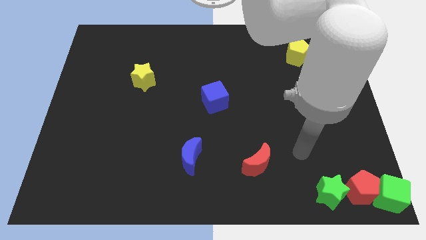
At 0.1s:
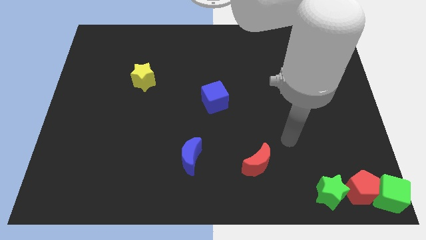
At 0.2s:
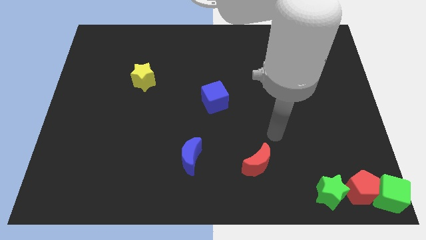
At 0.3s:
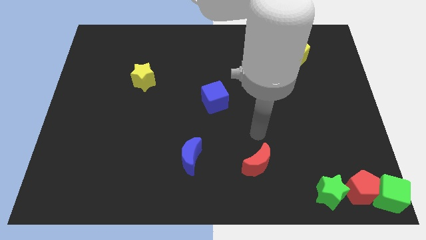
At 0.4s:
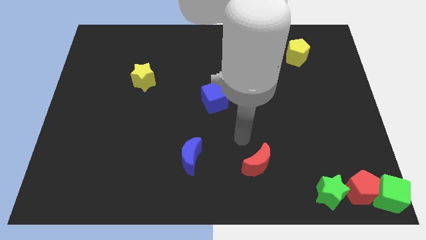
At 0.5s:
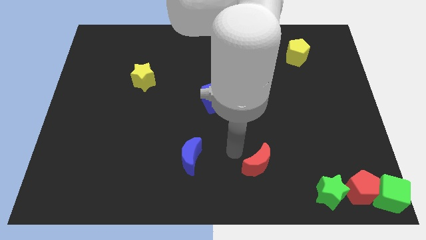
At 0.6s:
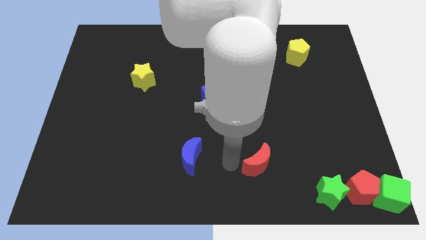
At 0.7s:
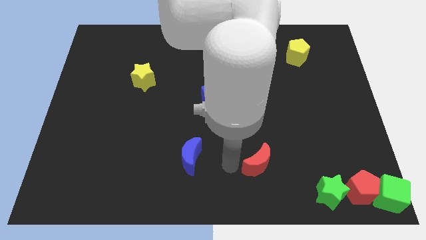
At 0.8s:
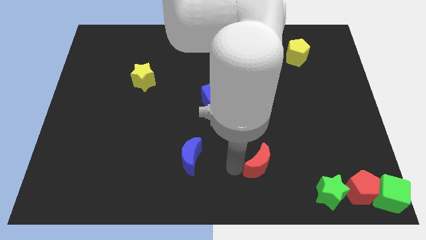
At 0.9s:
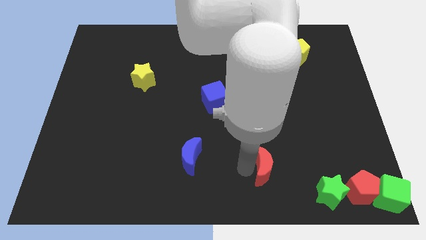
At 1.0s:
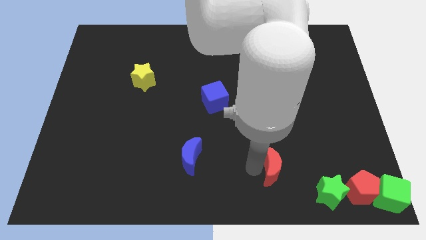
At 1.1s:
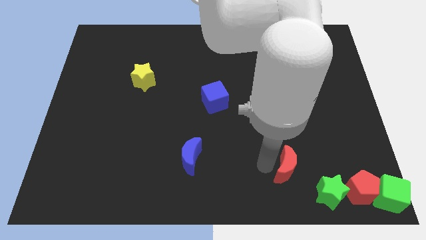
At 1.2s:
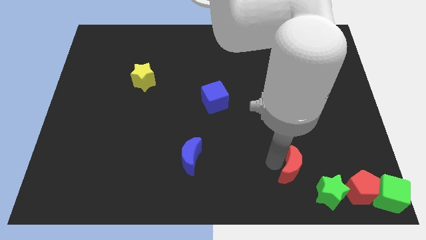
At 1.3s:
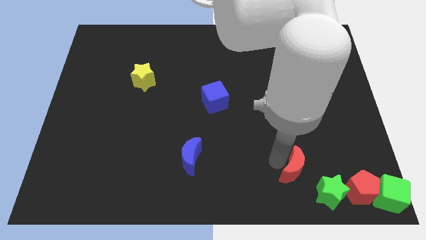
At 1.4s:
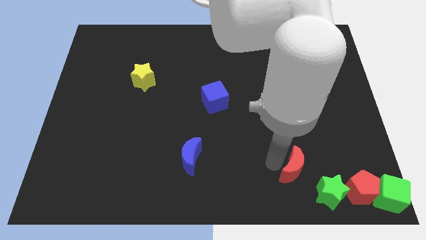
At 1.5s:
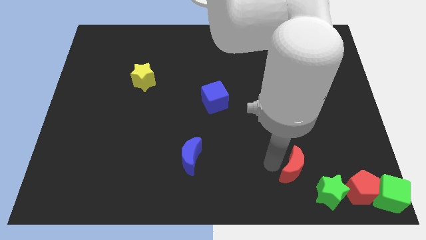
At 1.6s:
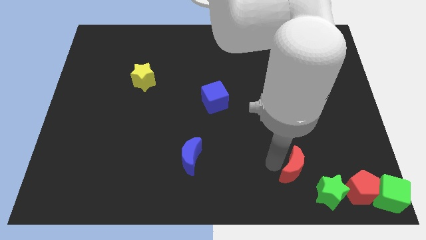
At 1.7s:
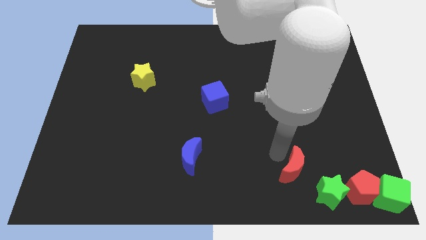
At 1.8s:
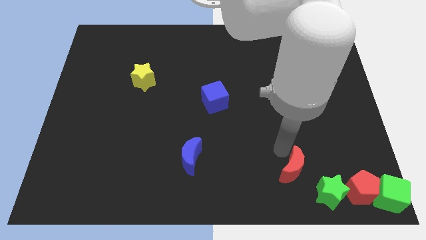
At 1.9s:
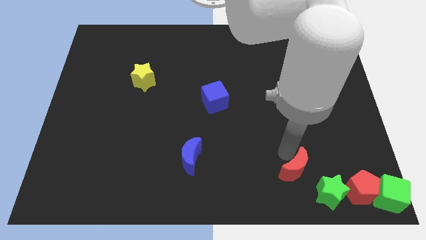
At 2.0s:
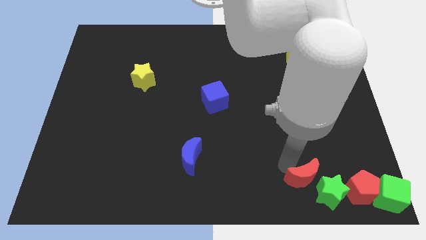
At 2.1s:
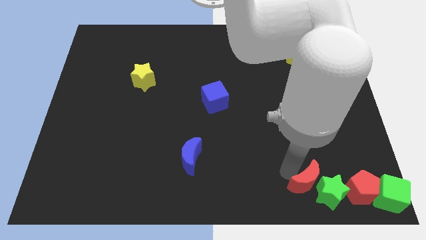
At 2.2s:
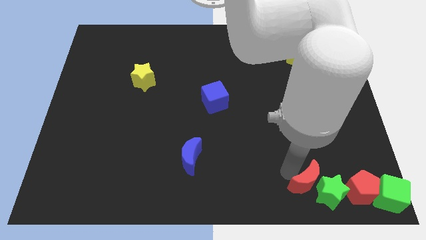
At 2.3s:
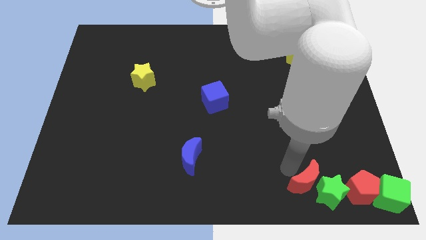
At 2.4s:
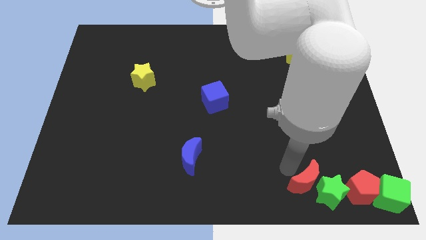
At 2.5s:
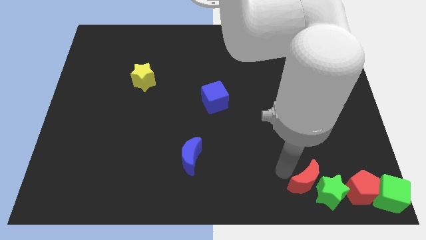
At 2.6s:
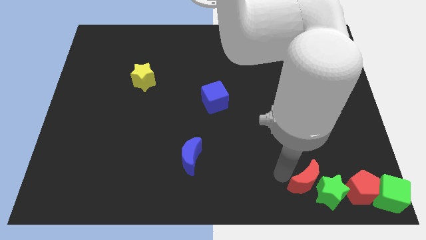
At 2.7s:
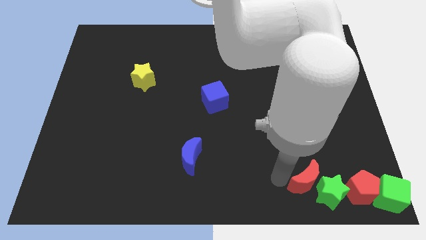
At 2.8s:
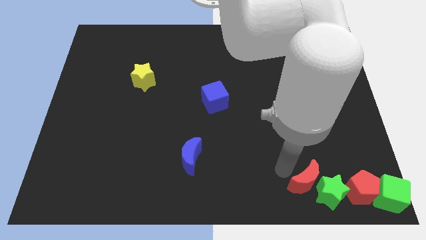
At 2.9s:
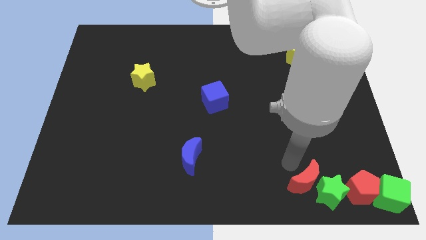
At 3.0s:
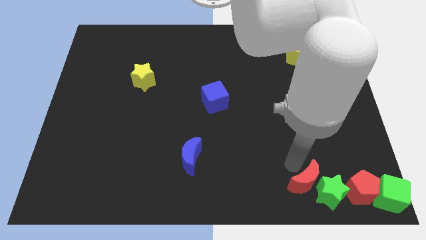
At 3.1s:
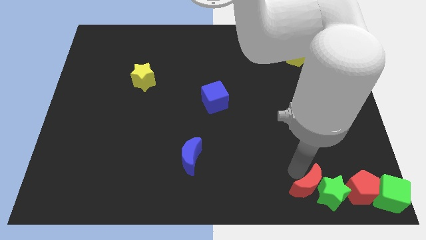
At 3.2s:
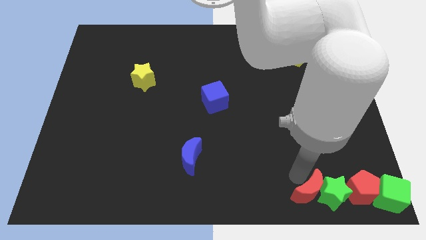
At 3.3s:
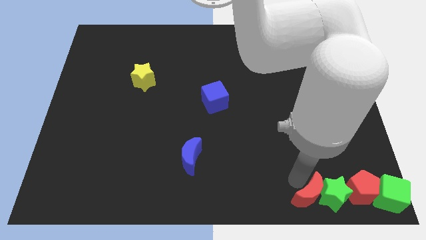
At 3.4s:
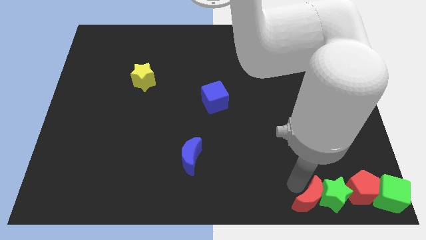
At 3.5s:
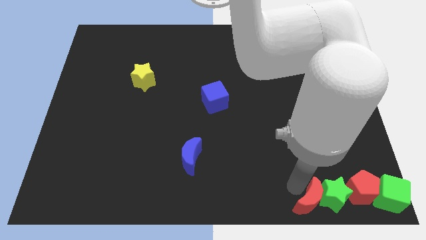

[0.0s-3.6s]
push the red moon into the green star

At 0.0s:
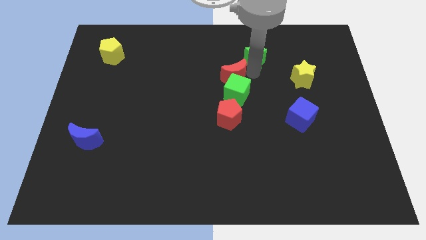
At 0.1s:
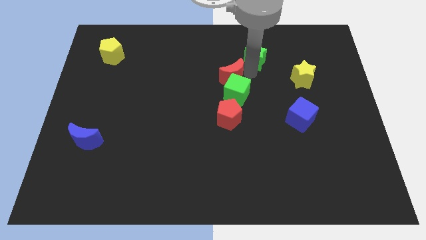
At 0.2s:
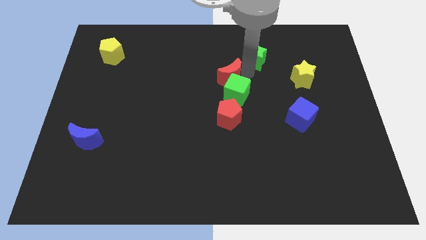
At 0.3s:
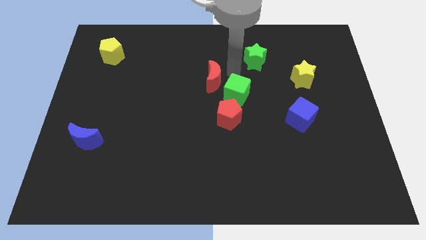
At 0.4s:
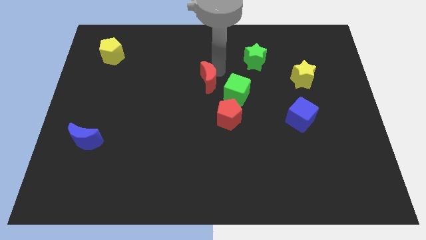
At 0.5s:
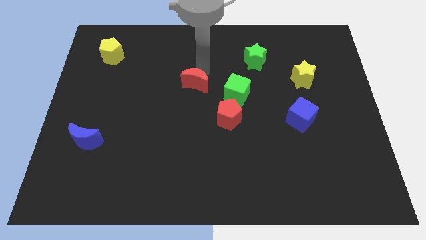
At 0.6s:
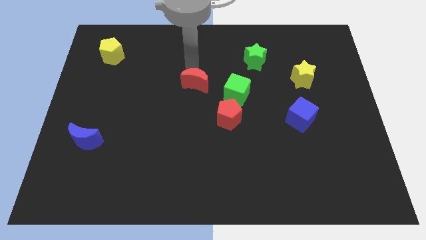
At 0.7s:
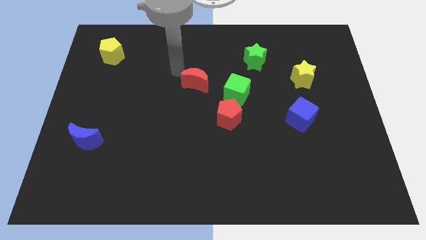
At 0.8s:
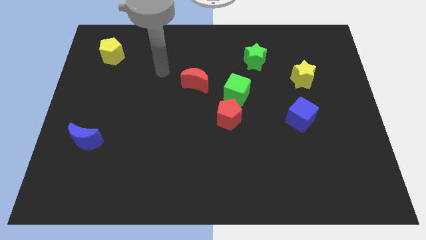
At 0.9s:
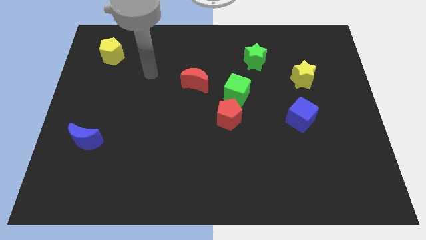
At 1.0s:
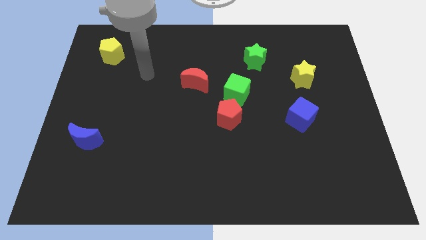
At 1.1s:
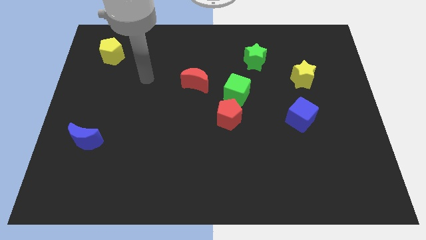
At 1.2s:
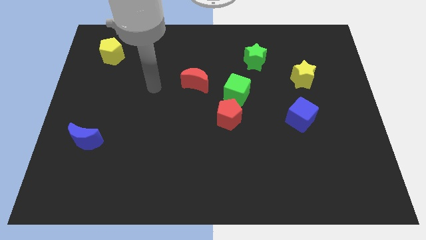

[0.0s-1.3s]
separate red crescent from green cube

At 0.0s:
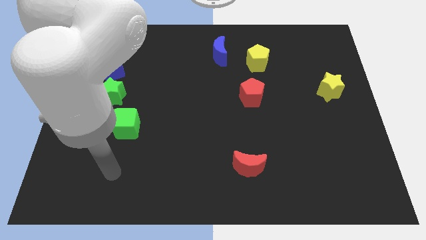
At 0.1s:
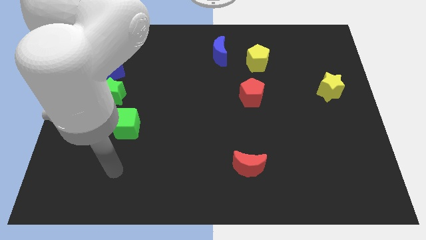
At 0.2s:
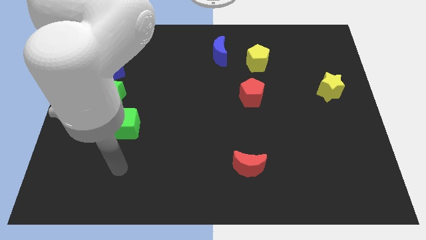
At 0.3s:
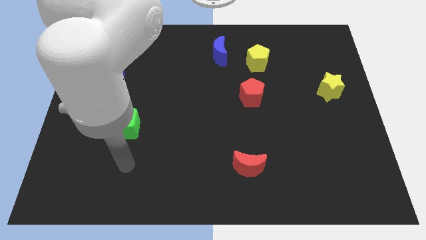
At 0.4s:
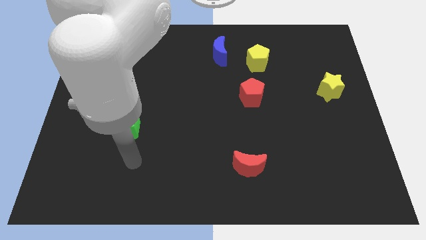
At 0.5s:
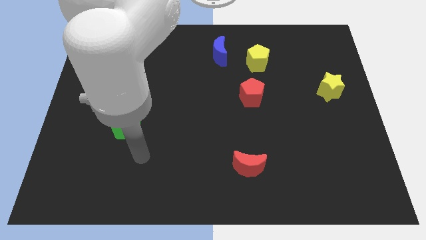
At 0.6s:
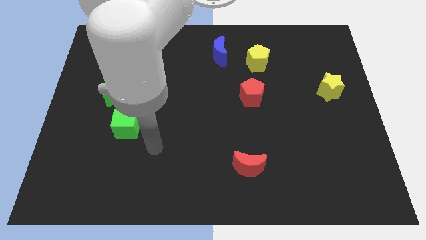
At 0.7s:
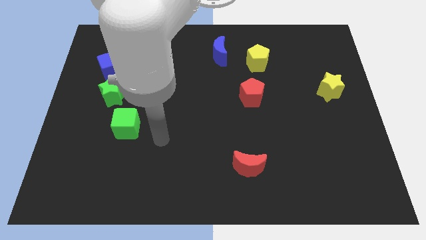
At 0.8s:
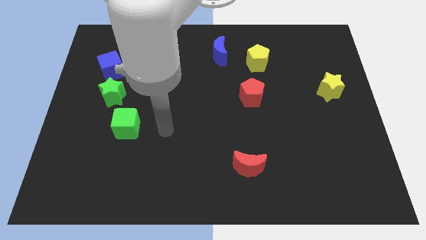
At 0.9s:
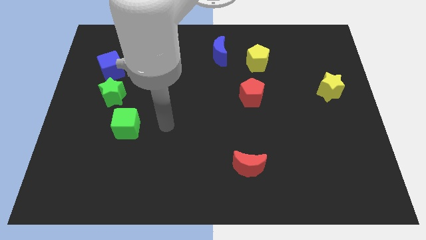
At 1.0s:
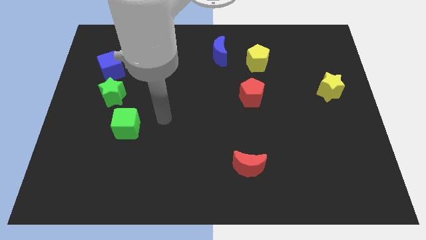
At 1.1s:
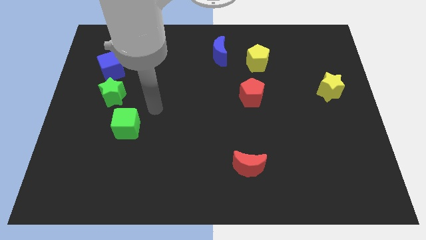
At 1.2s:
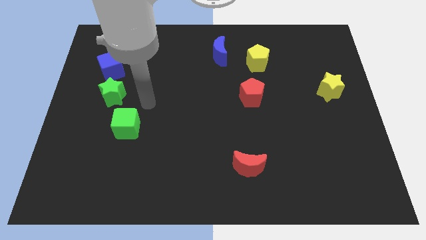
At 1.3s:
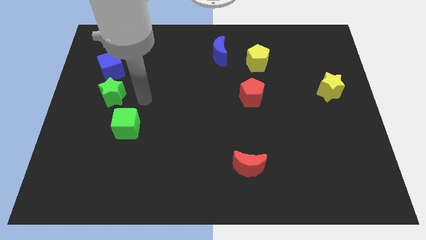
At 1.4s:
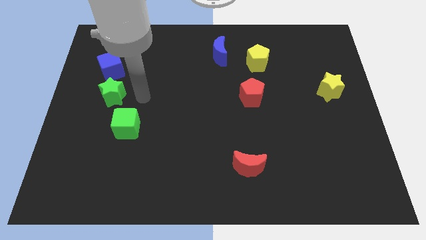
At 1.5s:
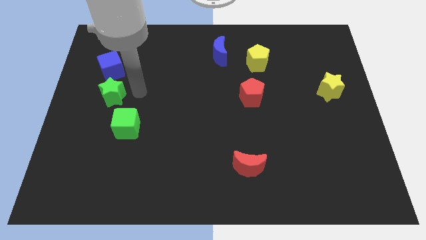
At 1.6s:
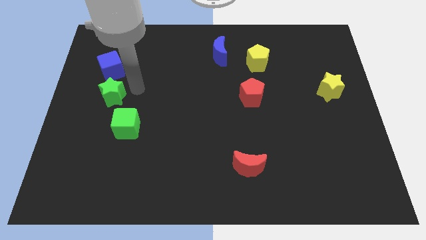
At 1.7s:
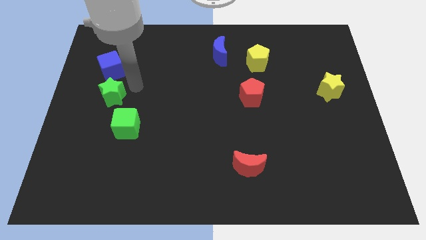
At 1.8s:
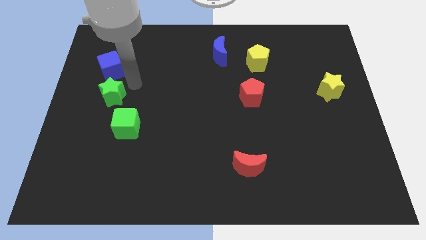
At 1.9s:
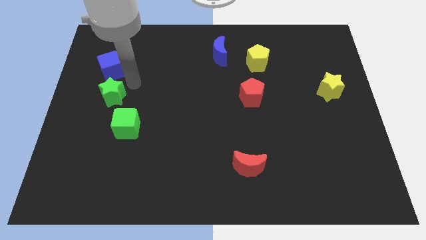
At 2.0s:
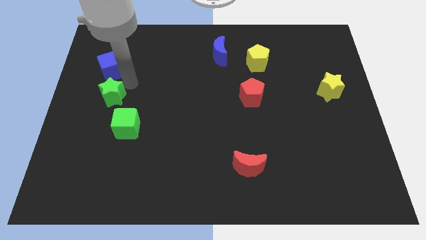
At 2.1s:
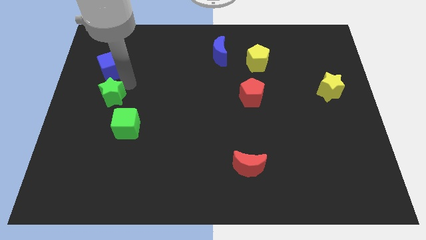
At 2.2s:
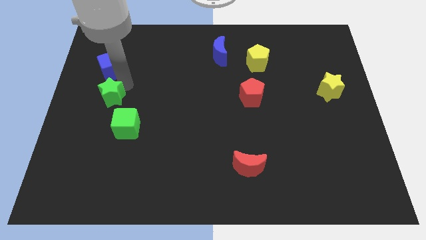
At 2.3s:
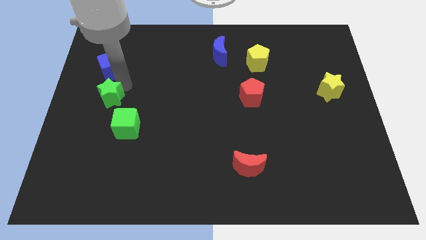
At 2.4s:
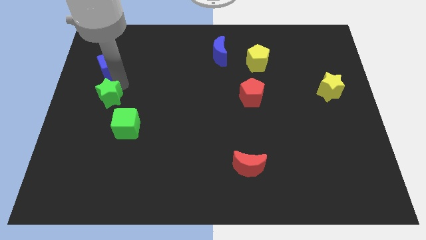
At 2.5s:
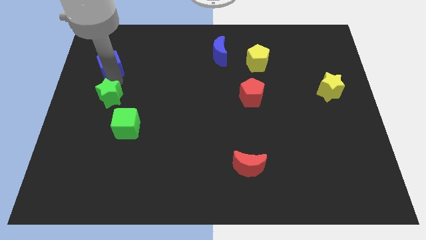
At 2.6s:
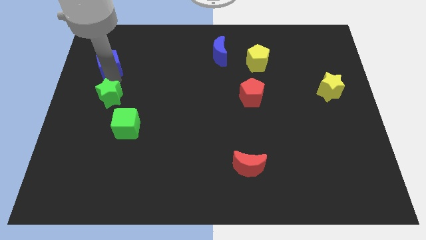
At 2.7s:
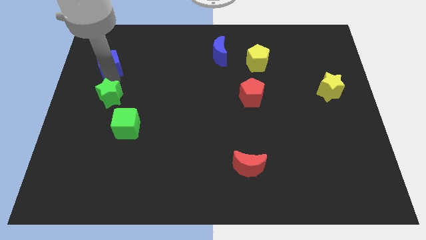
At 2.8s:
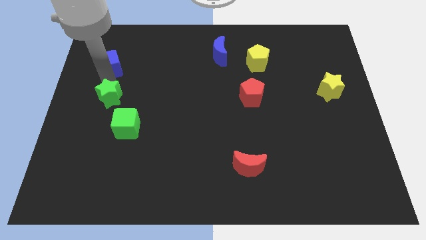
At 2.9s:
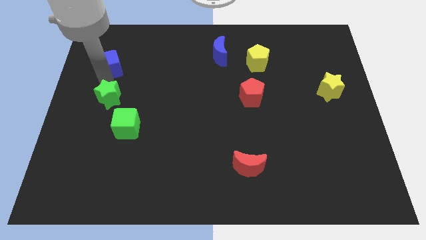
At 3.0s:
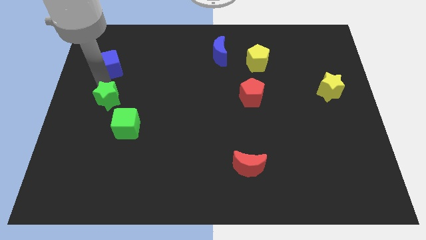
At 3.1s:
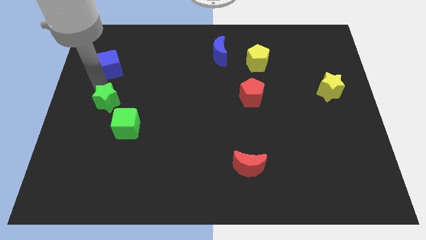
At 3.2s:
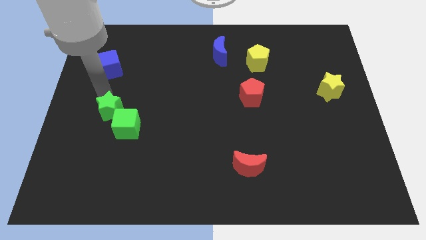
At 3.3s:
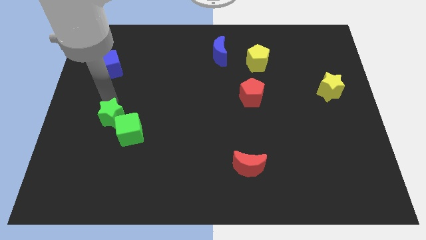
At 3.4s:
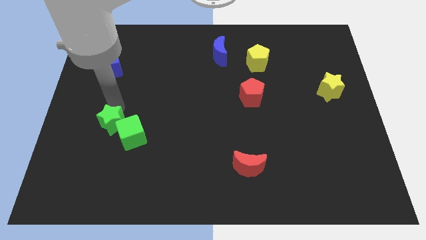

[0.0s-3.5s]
move the green star into the top left side of the green cube

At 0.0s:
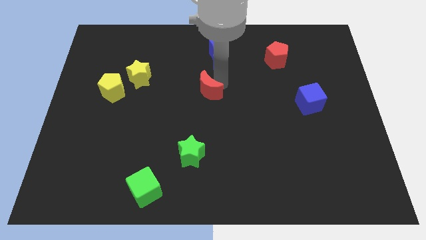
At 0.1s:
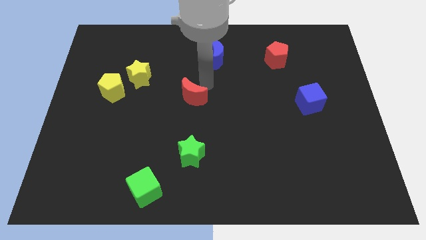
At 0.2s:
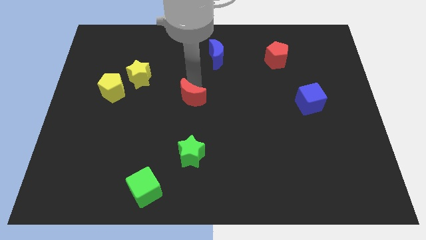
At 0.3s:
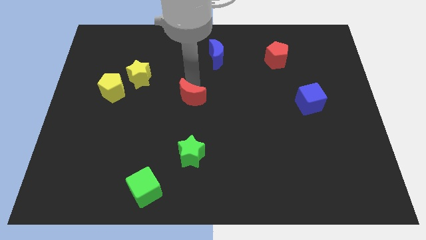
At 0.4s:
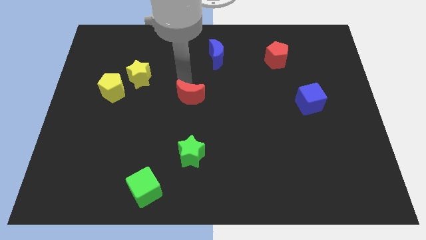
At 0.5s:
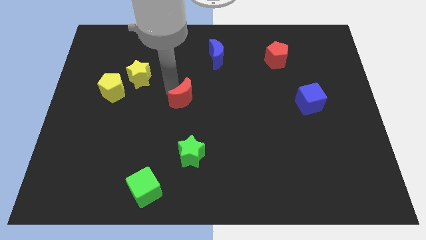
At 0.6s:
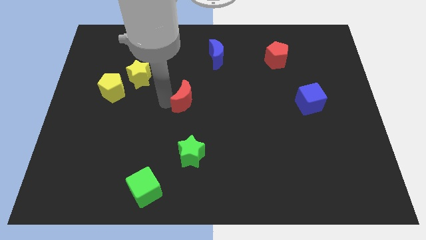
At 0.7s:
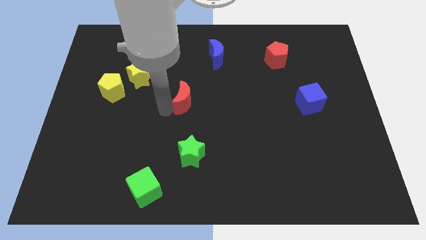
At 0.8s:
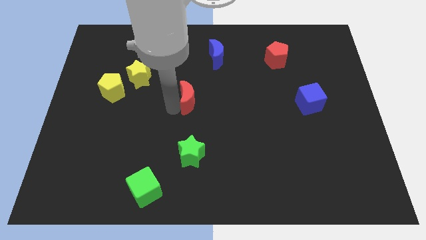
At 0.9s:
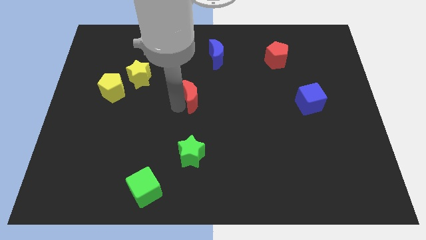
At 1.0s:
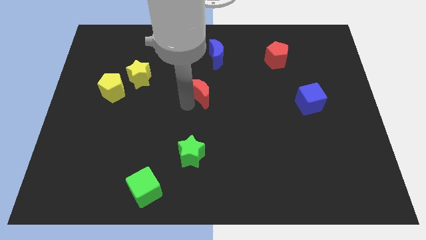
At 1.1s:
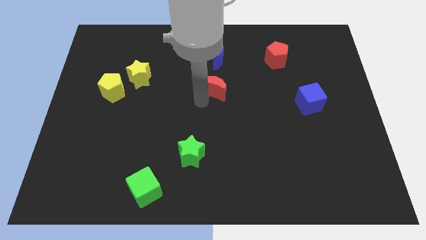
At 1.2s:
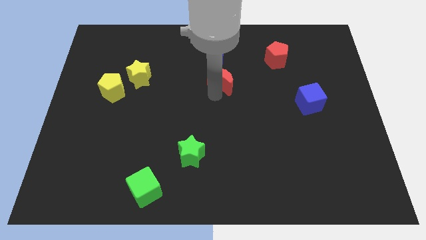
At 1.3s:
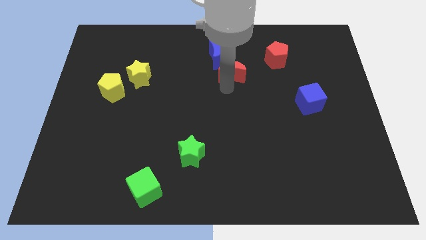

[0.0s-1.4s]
place the red crescent vertically below the blue crescent
